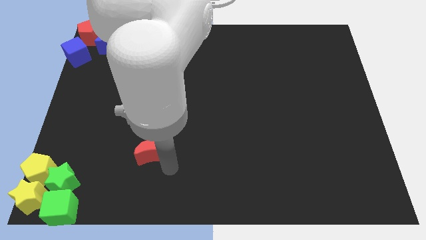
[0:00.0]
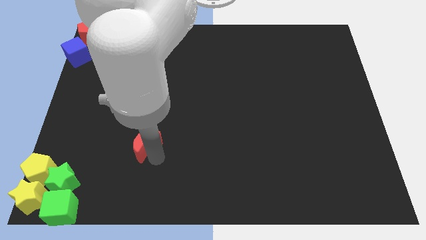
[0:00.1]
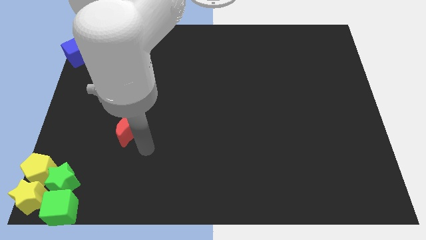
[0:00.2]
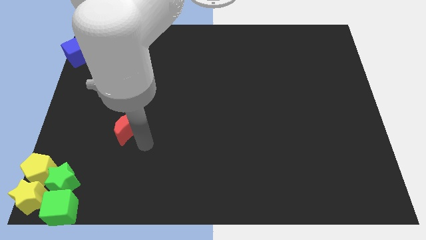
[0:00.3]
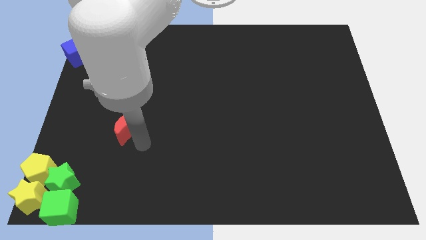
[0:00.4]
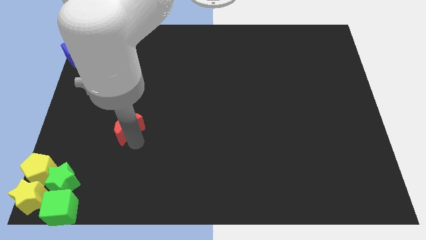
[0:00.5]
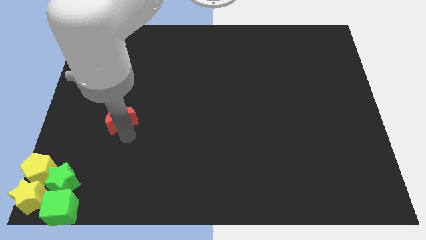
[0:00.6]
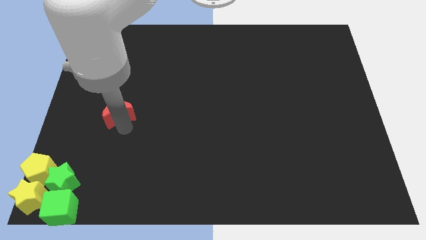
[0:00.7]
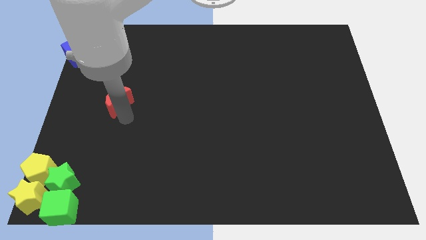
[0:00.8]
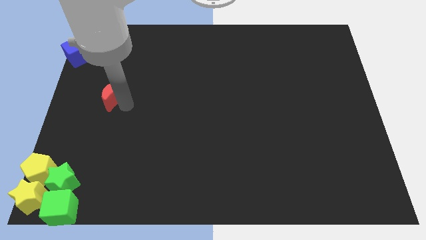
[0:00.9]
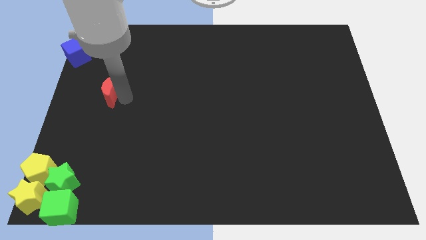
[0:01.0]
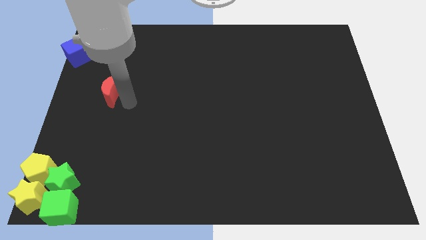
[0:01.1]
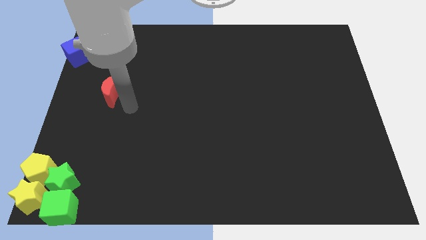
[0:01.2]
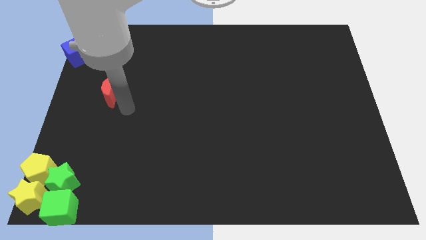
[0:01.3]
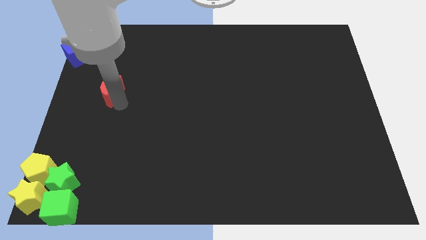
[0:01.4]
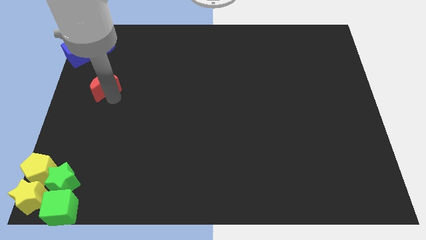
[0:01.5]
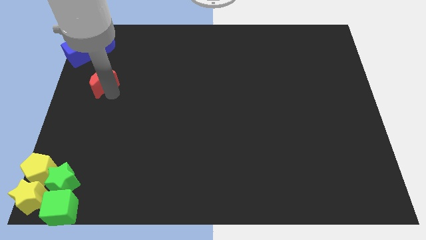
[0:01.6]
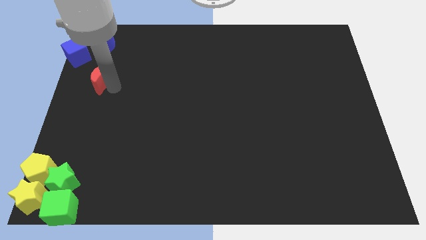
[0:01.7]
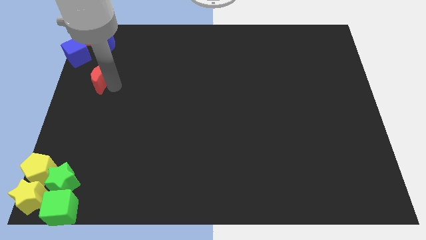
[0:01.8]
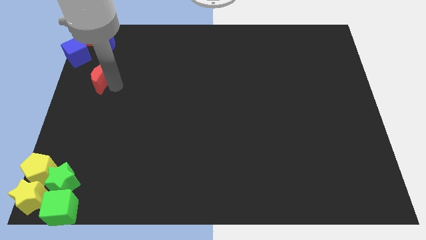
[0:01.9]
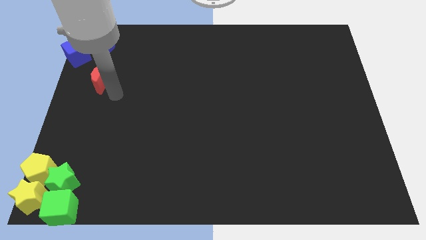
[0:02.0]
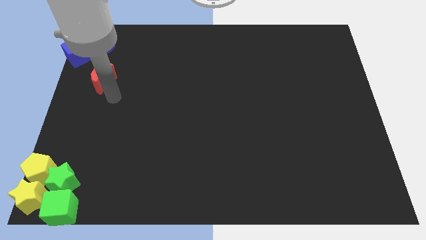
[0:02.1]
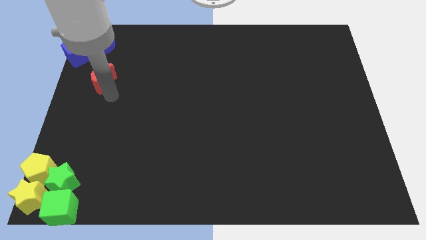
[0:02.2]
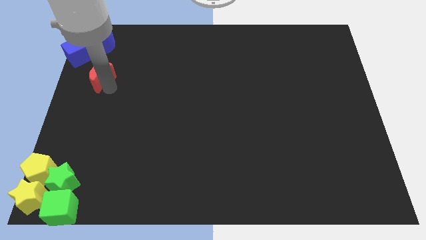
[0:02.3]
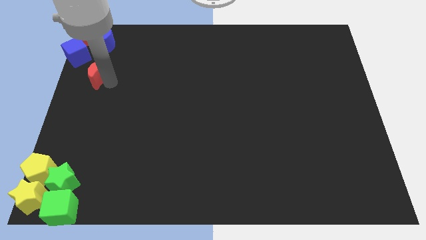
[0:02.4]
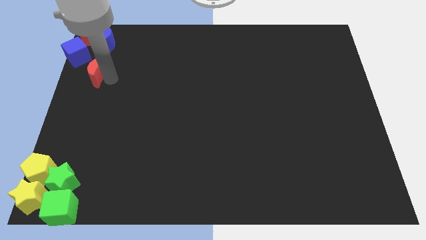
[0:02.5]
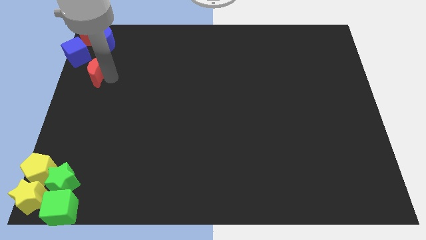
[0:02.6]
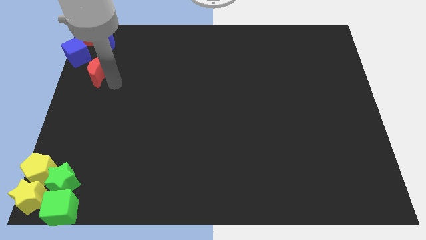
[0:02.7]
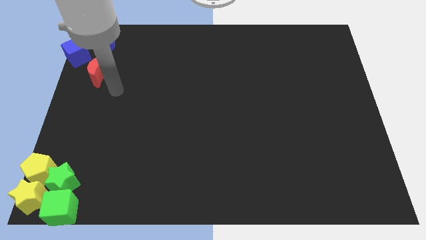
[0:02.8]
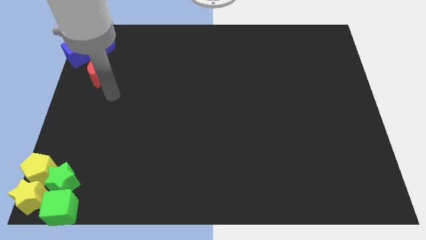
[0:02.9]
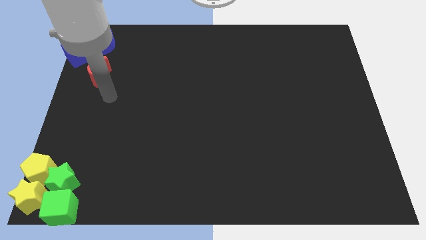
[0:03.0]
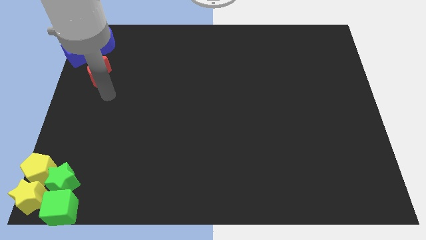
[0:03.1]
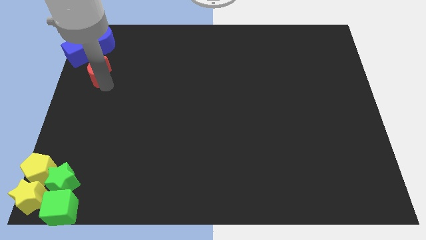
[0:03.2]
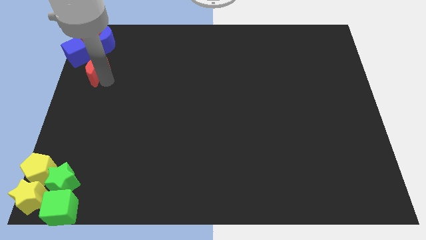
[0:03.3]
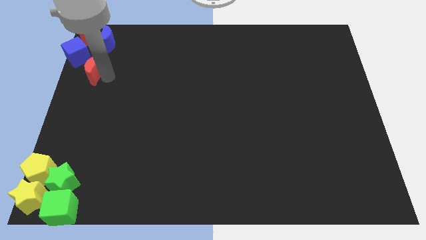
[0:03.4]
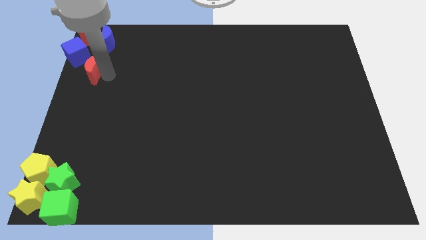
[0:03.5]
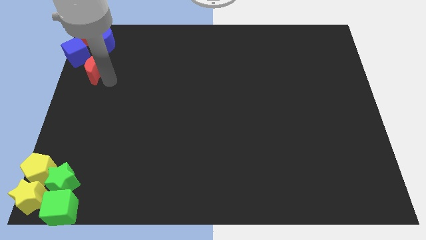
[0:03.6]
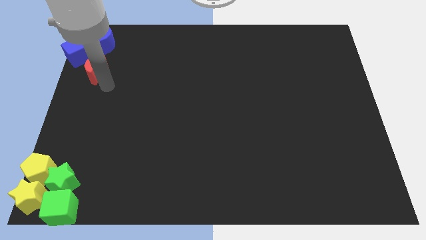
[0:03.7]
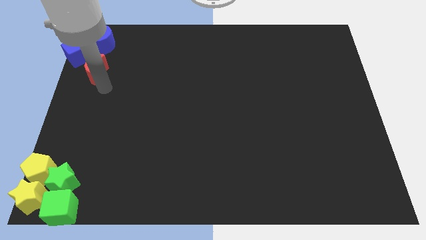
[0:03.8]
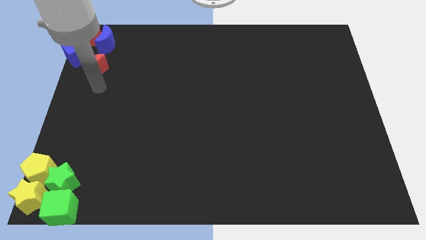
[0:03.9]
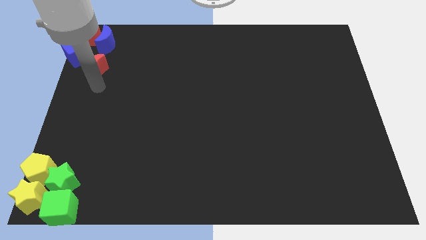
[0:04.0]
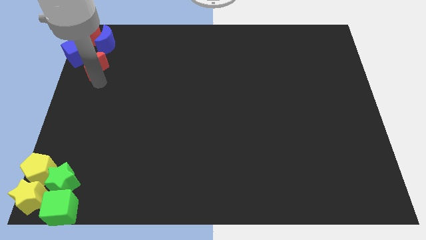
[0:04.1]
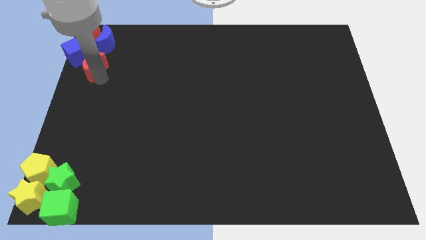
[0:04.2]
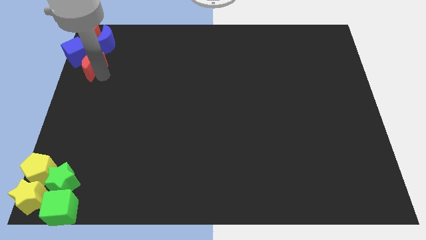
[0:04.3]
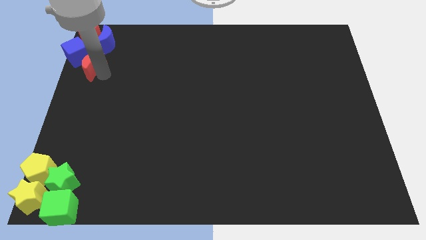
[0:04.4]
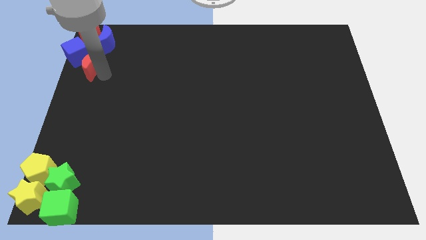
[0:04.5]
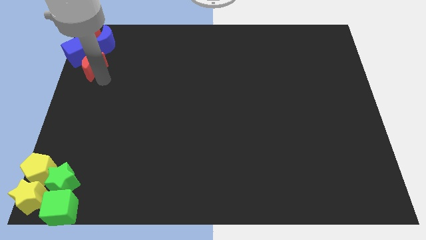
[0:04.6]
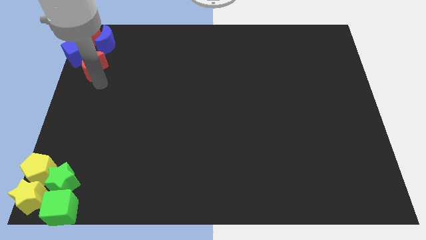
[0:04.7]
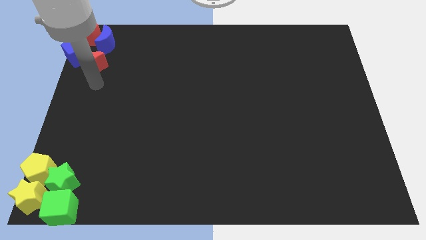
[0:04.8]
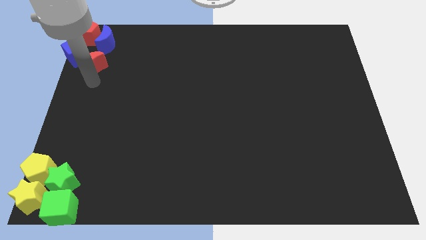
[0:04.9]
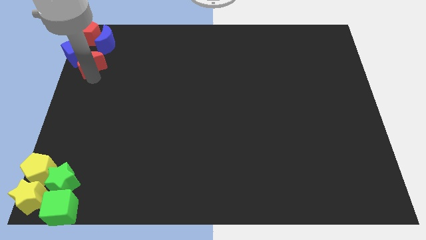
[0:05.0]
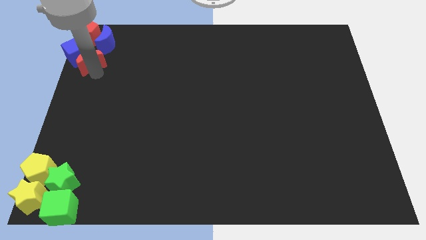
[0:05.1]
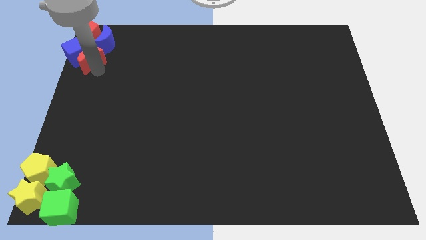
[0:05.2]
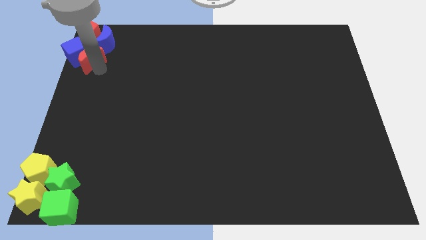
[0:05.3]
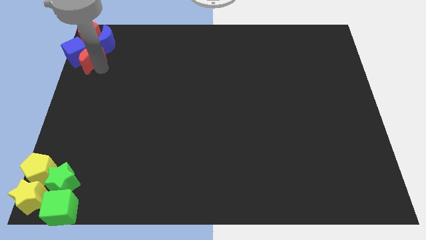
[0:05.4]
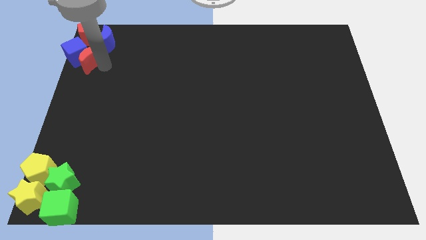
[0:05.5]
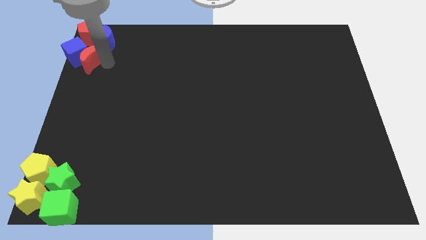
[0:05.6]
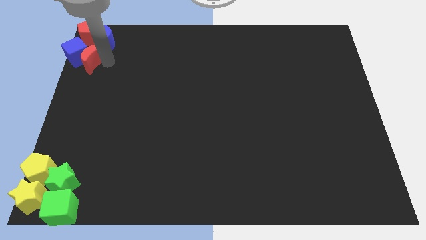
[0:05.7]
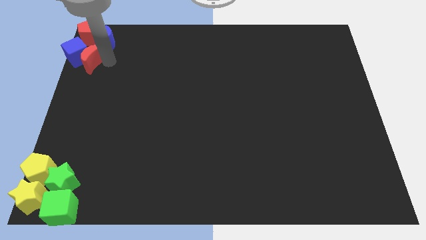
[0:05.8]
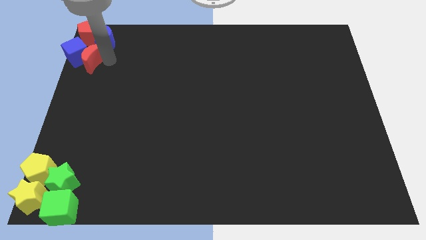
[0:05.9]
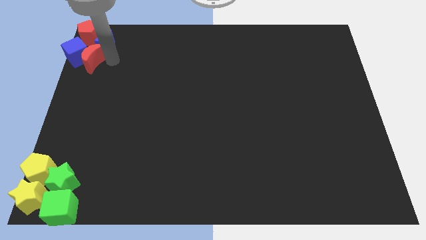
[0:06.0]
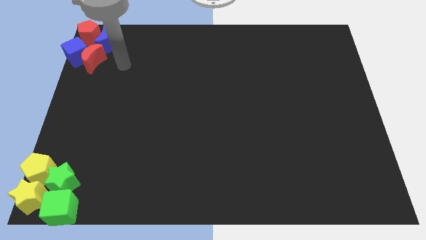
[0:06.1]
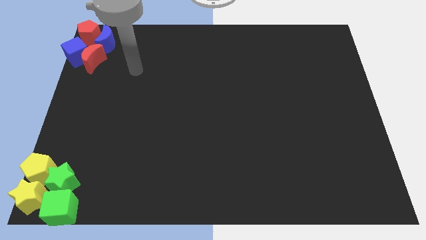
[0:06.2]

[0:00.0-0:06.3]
push the red moon to bottom of blue blocks

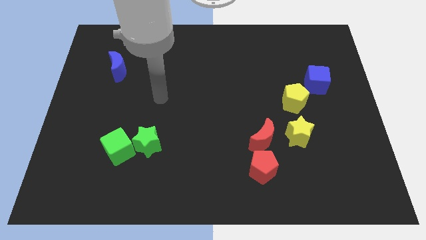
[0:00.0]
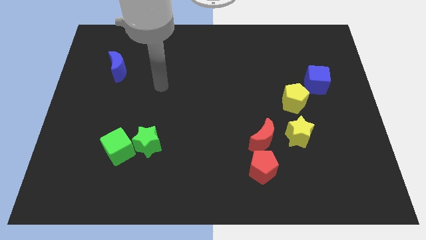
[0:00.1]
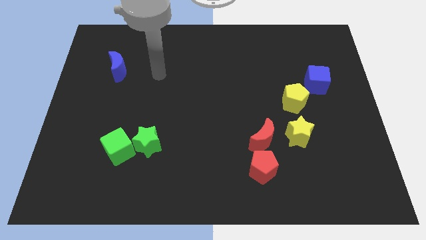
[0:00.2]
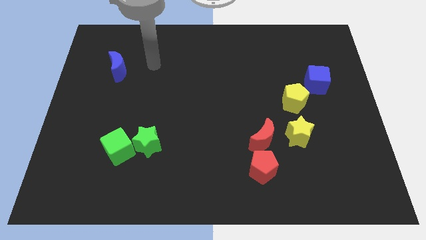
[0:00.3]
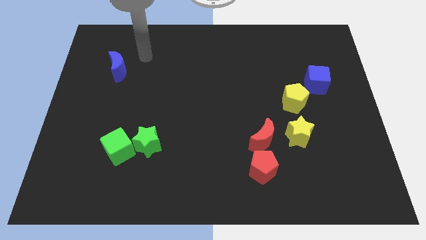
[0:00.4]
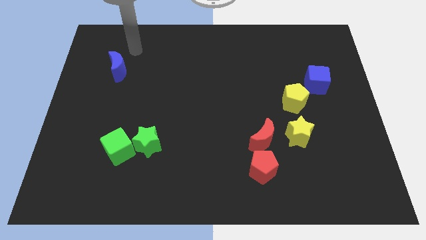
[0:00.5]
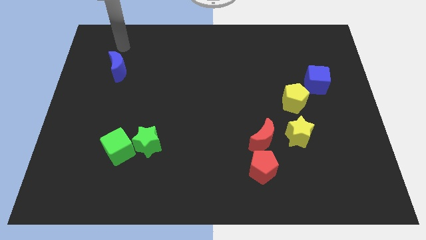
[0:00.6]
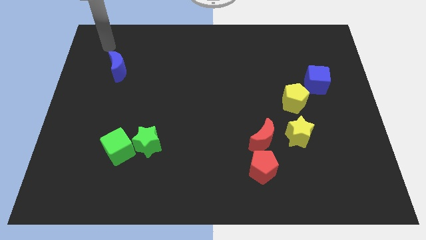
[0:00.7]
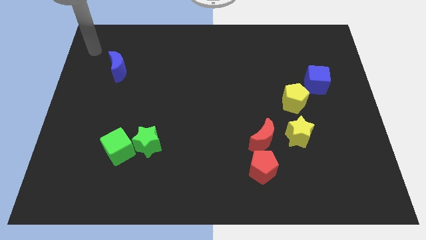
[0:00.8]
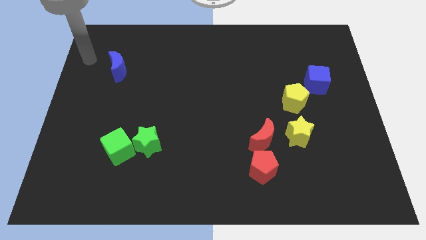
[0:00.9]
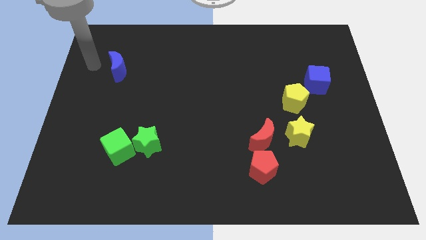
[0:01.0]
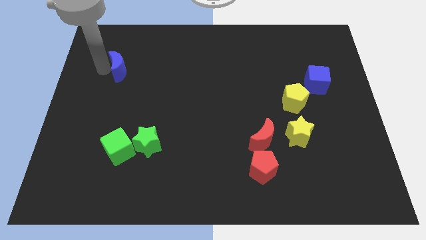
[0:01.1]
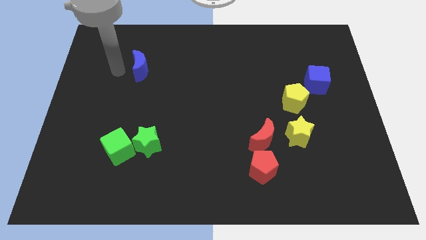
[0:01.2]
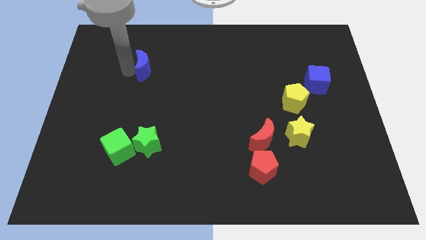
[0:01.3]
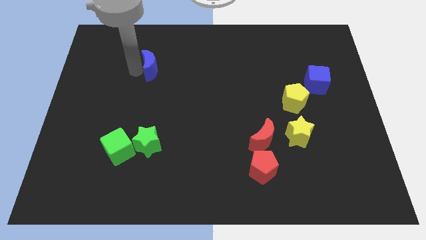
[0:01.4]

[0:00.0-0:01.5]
place the blue crescent vertically above the green star

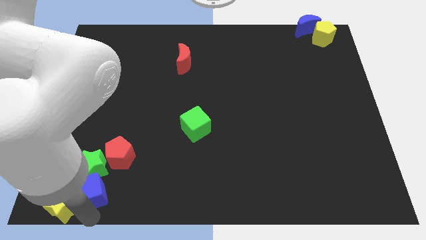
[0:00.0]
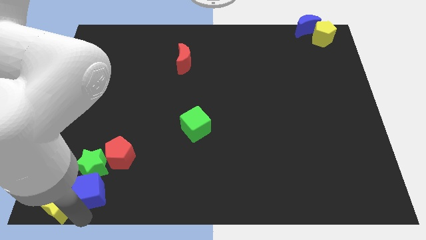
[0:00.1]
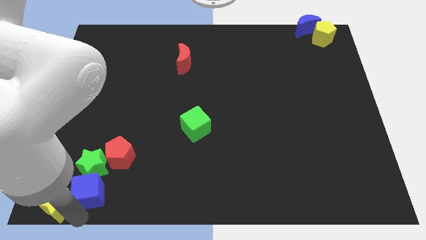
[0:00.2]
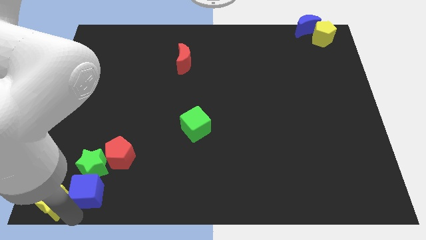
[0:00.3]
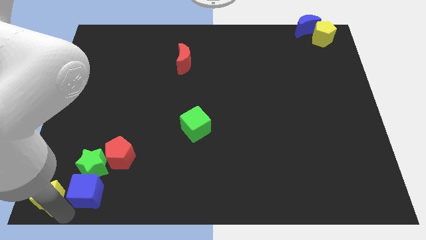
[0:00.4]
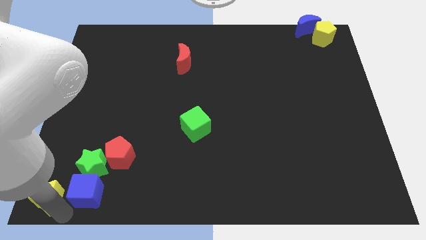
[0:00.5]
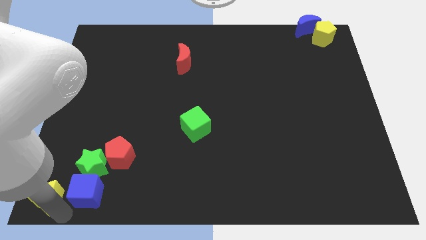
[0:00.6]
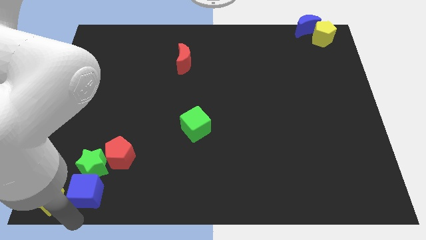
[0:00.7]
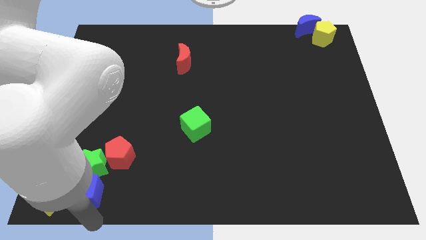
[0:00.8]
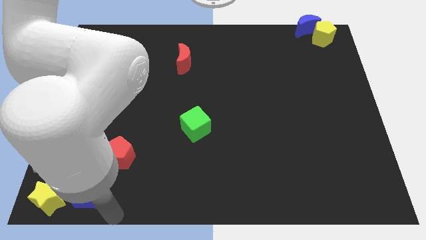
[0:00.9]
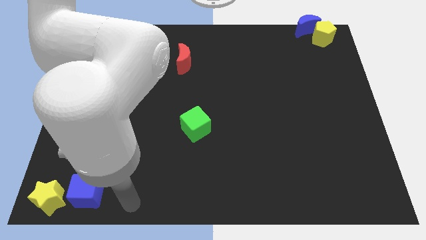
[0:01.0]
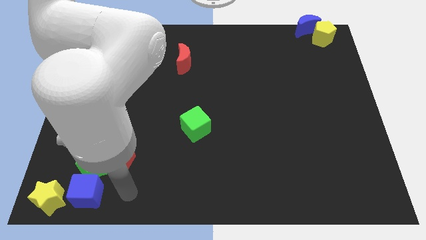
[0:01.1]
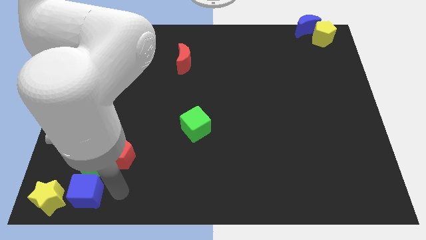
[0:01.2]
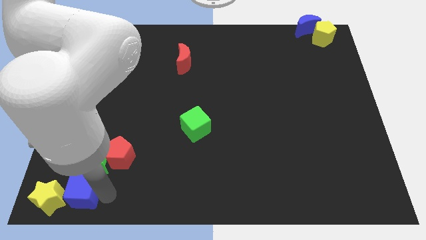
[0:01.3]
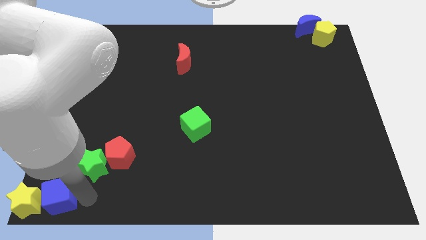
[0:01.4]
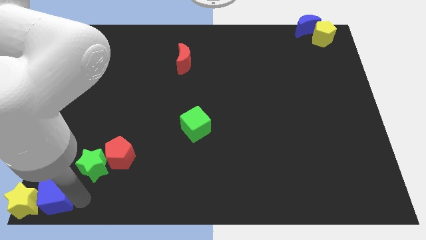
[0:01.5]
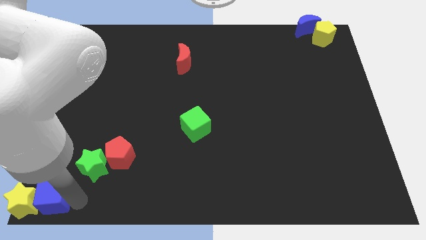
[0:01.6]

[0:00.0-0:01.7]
push the yellow star with the blue cube to the bottom left corner of the board
